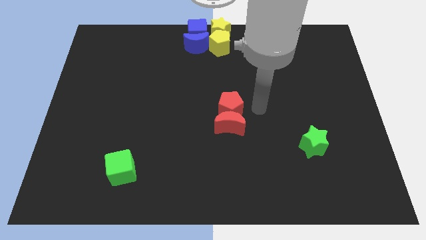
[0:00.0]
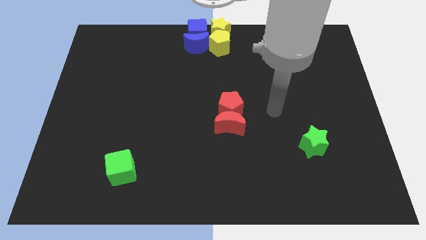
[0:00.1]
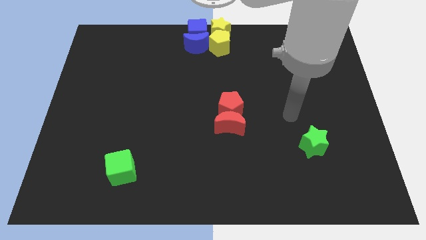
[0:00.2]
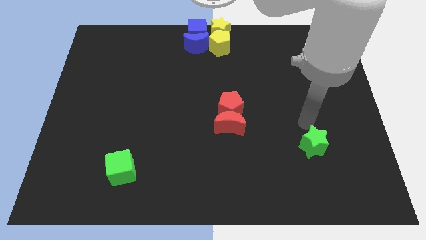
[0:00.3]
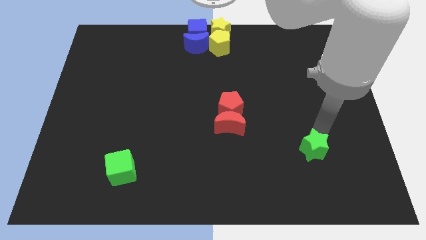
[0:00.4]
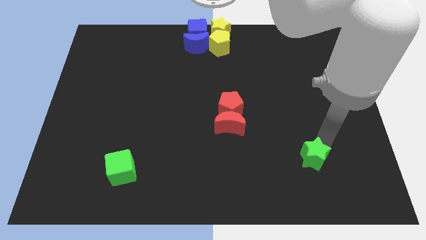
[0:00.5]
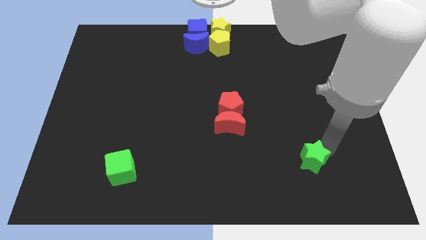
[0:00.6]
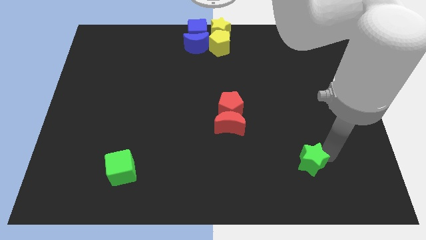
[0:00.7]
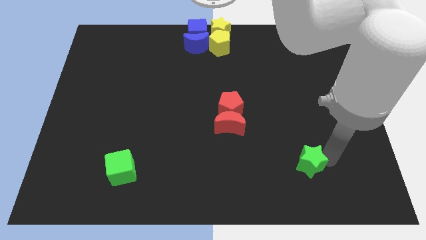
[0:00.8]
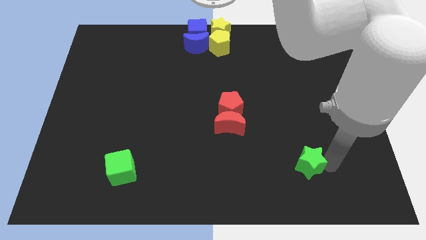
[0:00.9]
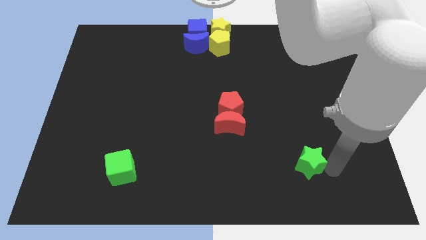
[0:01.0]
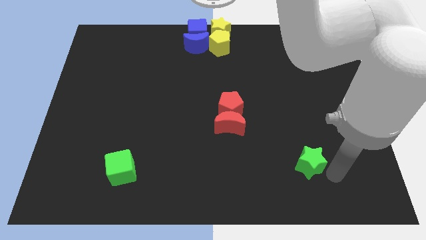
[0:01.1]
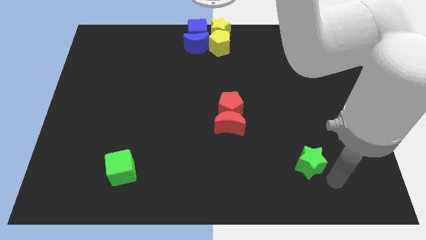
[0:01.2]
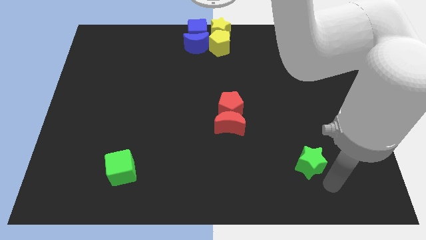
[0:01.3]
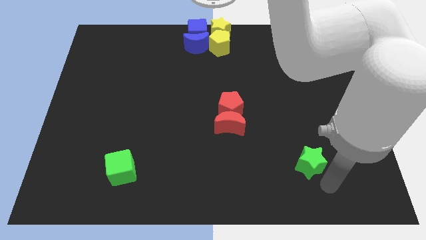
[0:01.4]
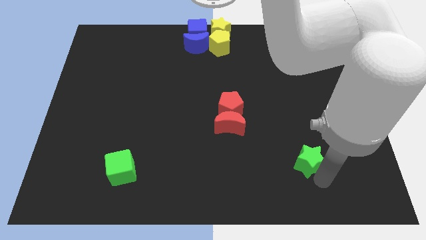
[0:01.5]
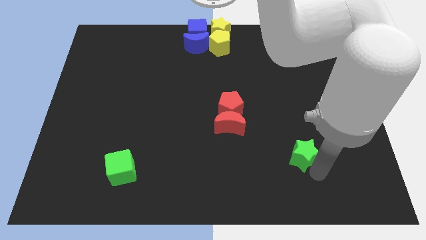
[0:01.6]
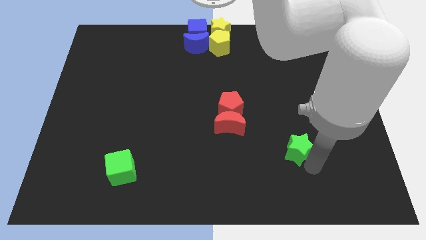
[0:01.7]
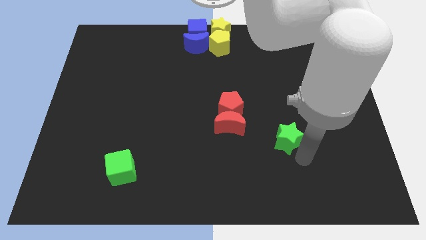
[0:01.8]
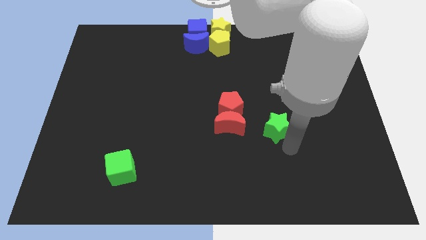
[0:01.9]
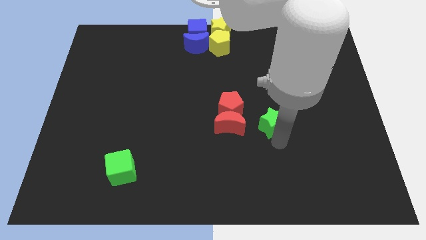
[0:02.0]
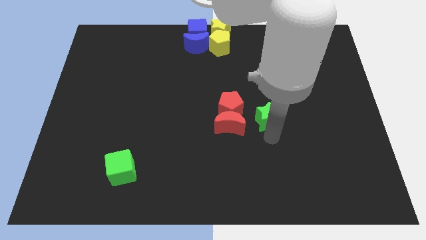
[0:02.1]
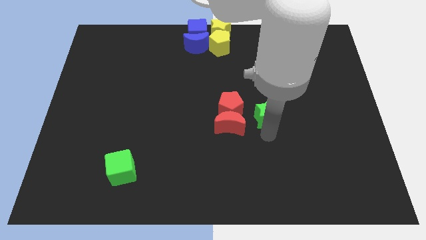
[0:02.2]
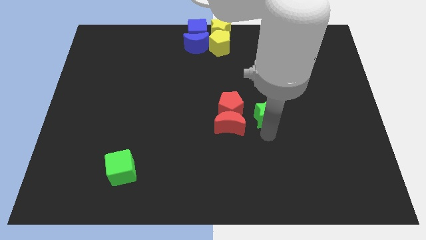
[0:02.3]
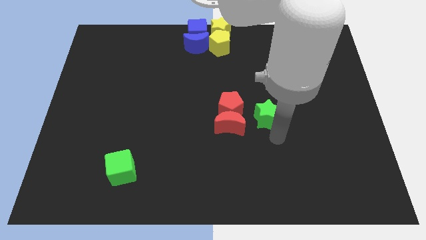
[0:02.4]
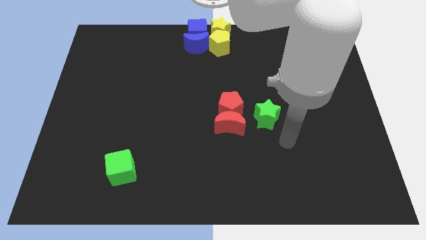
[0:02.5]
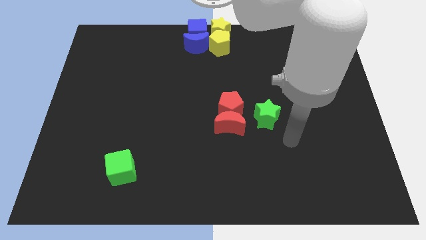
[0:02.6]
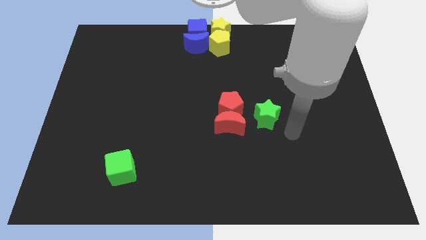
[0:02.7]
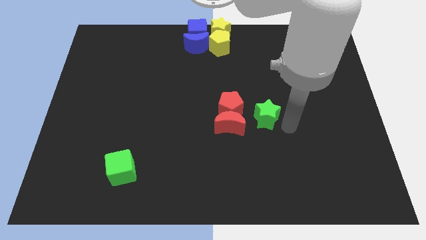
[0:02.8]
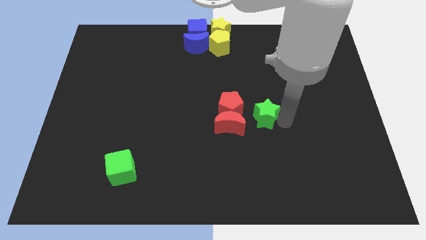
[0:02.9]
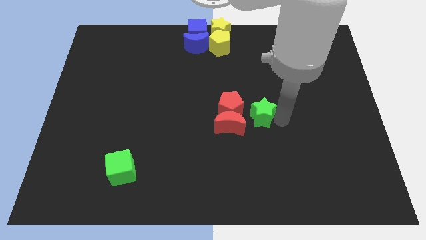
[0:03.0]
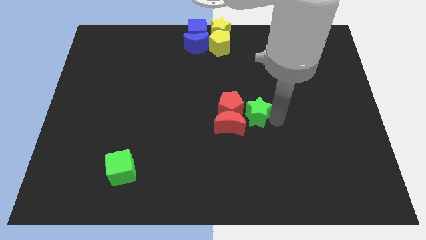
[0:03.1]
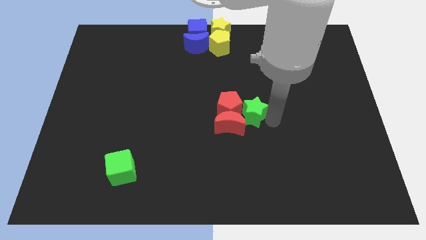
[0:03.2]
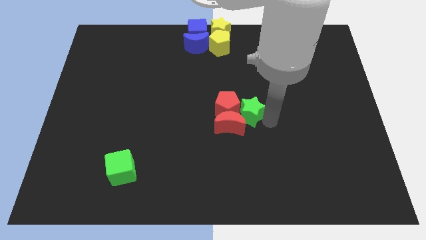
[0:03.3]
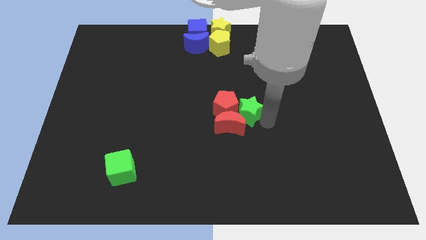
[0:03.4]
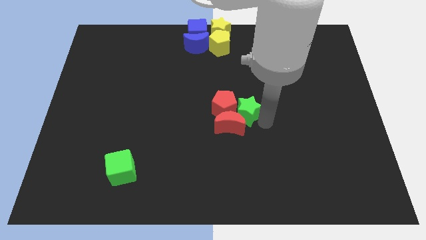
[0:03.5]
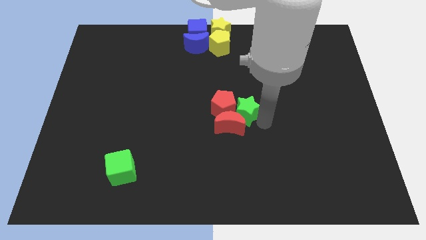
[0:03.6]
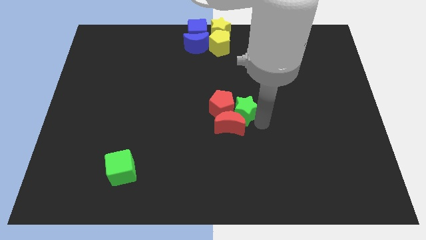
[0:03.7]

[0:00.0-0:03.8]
move the green star into the group of red blocks

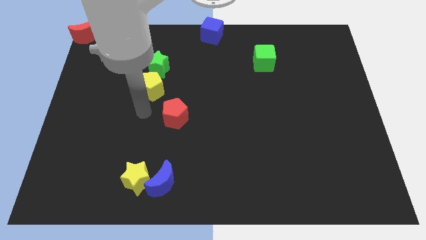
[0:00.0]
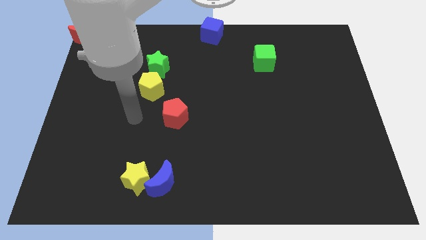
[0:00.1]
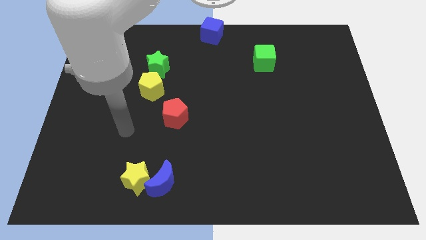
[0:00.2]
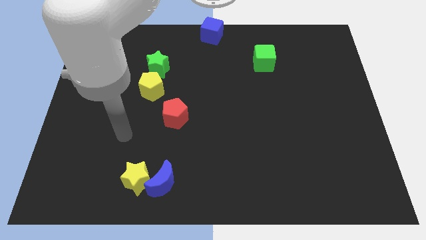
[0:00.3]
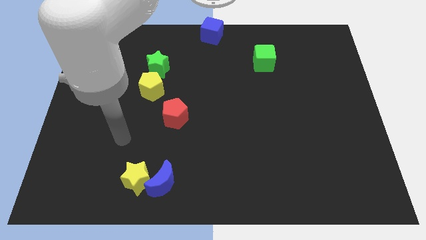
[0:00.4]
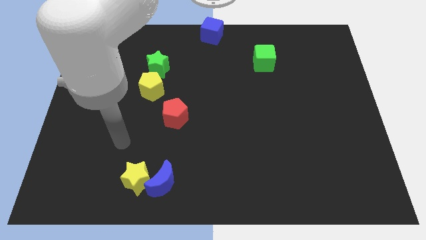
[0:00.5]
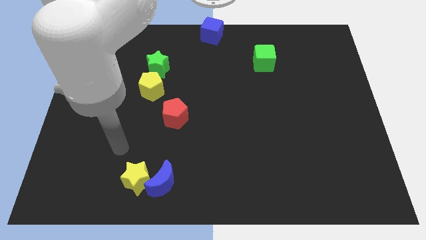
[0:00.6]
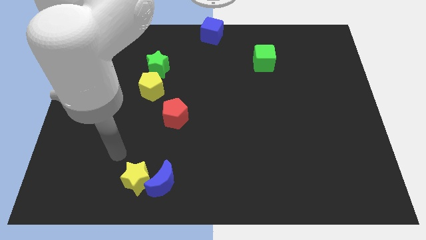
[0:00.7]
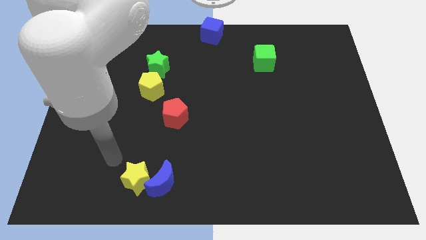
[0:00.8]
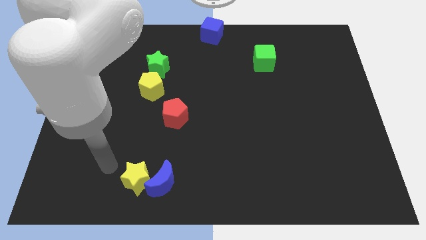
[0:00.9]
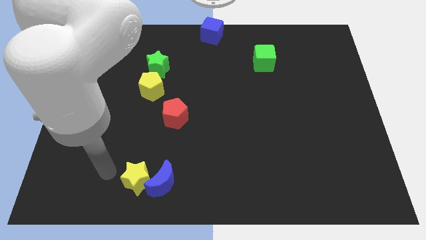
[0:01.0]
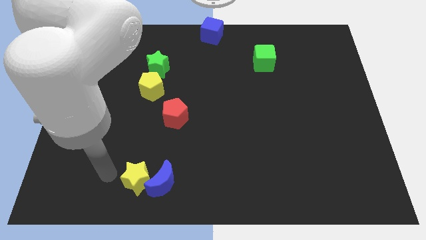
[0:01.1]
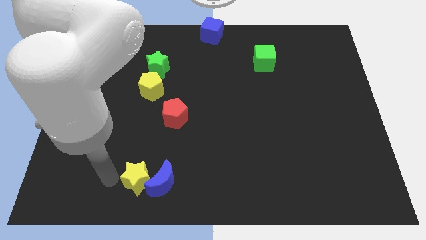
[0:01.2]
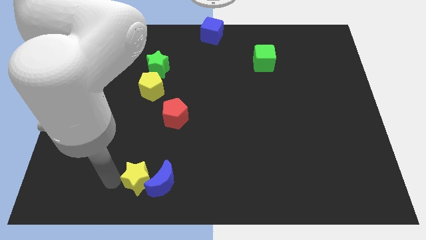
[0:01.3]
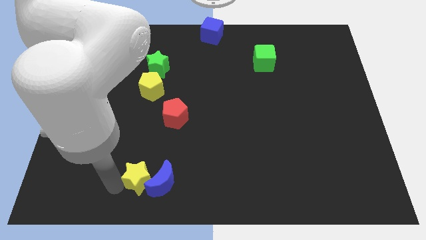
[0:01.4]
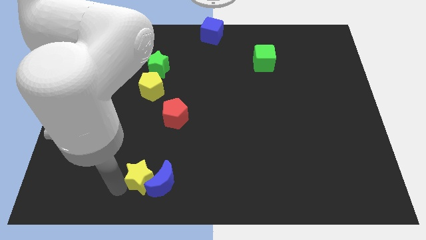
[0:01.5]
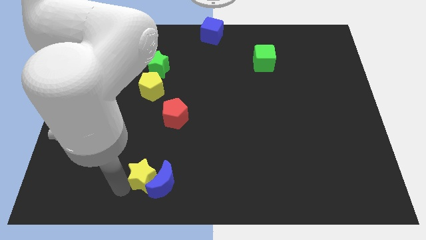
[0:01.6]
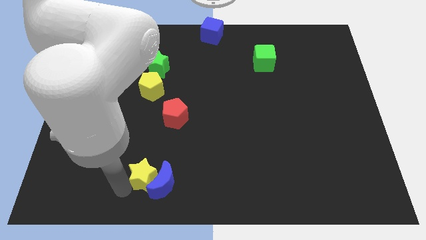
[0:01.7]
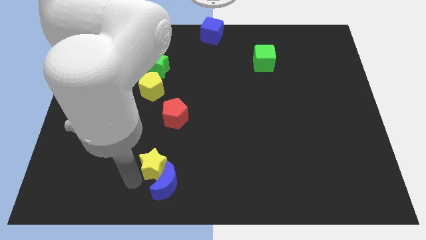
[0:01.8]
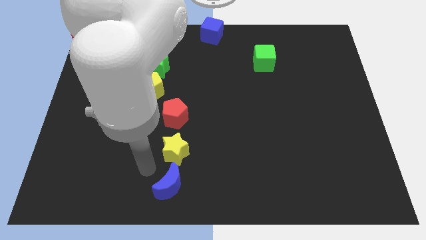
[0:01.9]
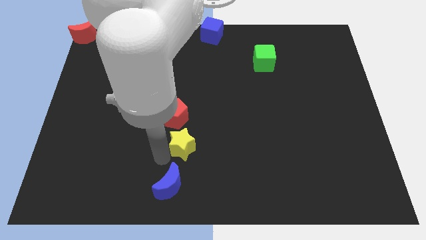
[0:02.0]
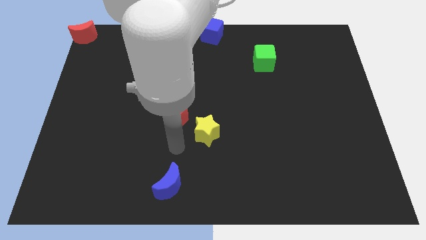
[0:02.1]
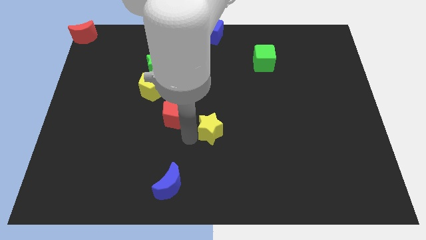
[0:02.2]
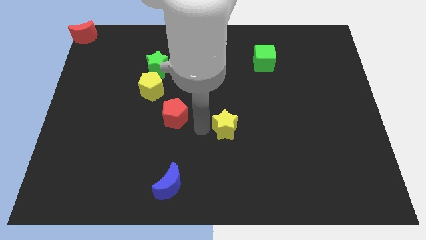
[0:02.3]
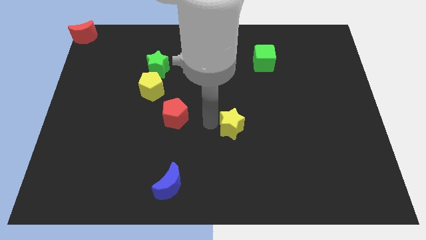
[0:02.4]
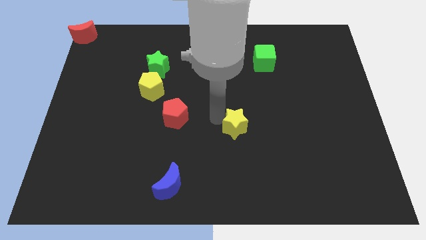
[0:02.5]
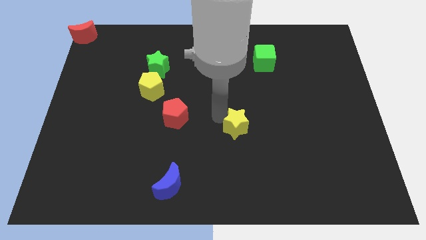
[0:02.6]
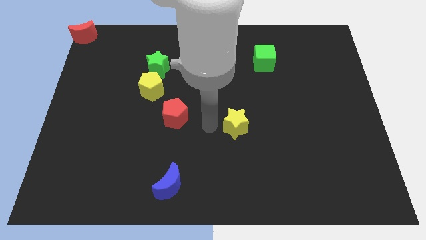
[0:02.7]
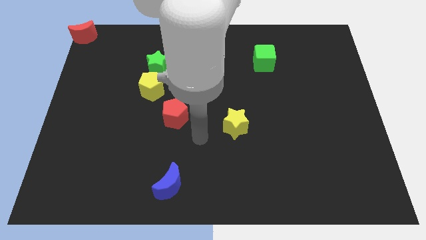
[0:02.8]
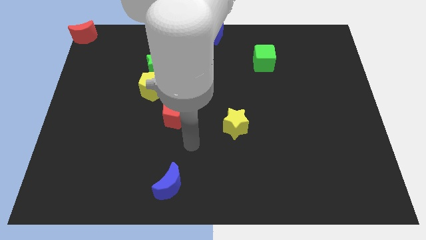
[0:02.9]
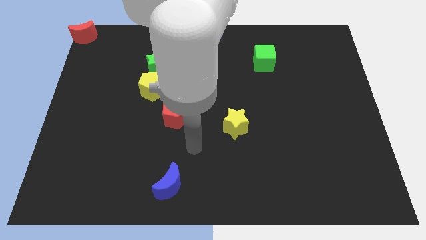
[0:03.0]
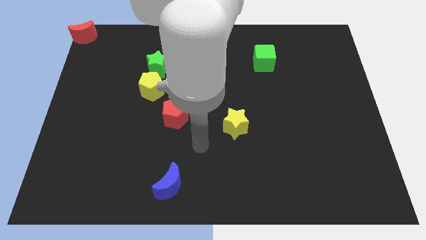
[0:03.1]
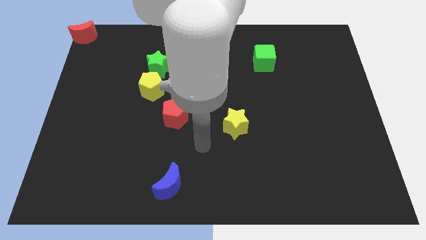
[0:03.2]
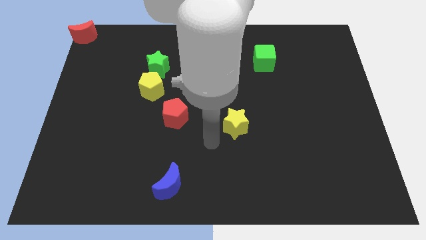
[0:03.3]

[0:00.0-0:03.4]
separate the yellow star from the blue moon

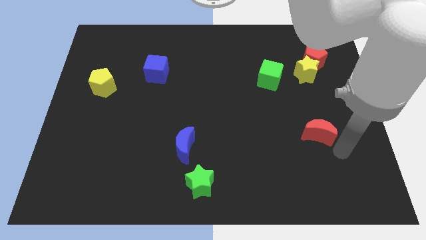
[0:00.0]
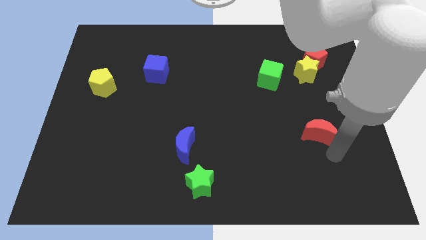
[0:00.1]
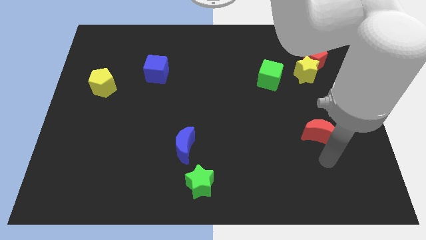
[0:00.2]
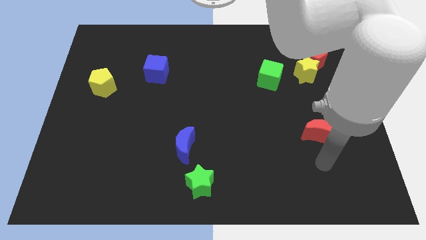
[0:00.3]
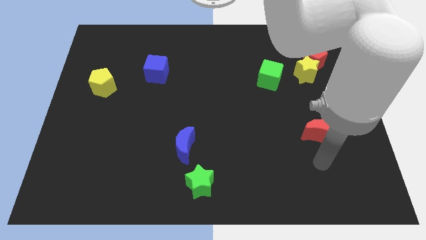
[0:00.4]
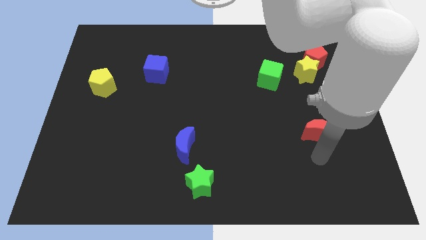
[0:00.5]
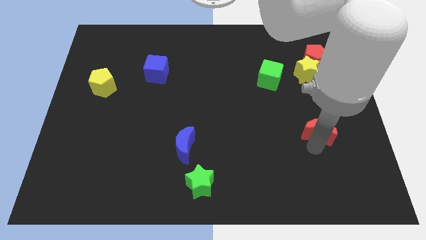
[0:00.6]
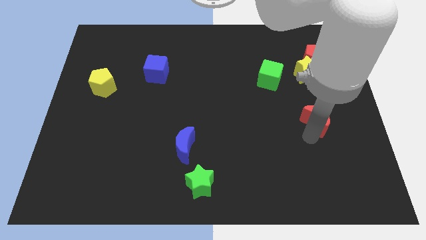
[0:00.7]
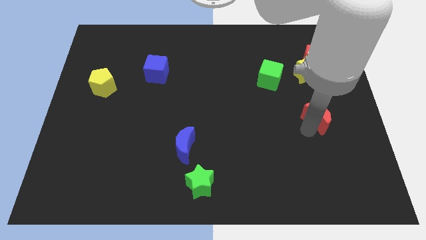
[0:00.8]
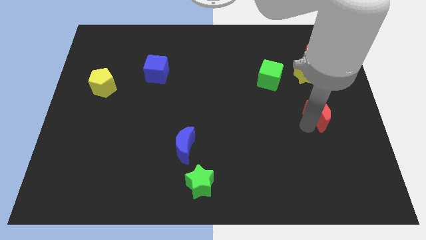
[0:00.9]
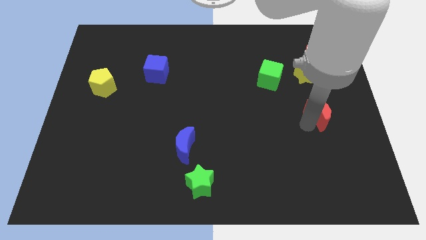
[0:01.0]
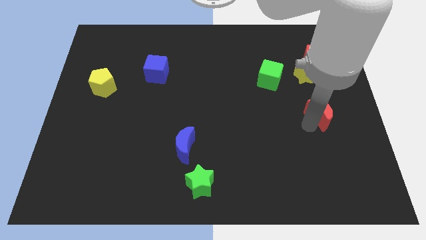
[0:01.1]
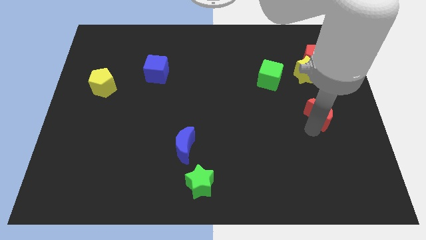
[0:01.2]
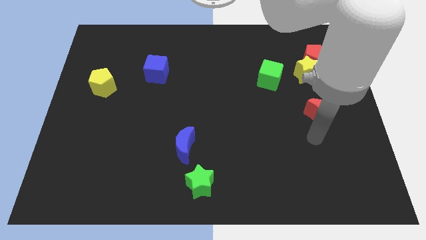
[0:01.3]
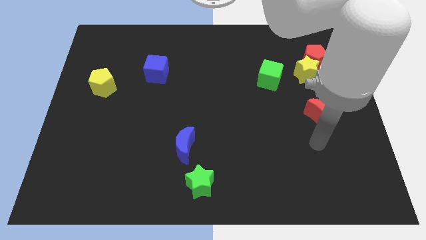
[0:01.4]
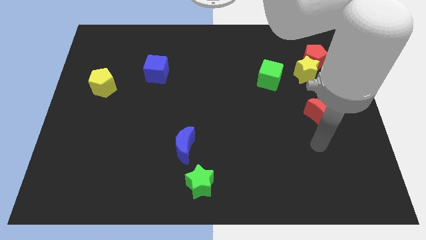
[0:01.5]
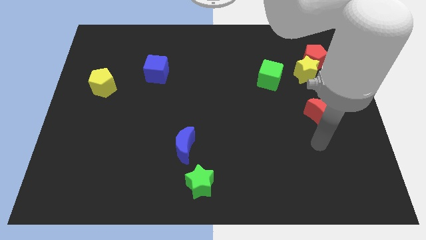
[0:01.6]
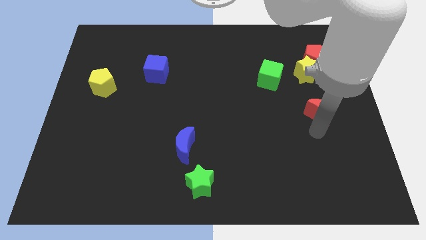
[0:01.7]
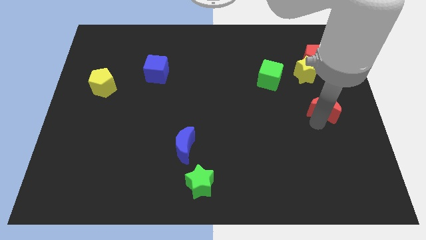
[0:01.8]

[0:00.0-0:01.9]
move the red moon towards the yellow star
